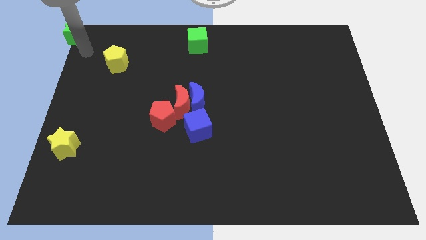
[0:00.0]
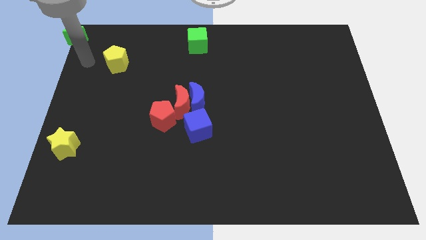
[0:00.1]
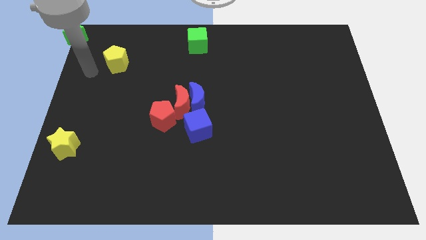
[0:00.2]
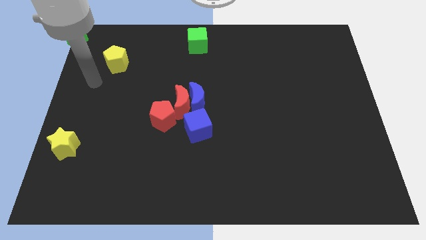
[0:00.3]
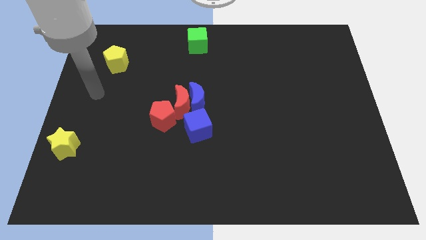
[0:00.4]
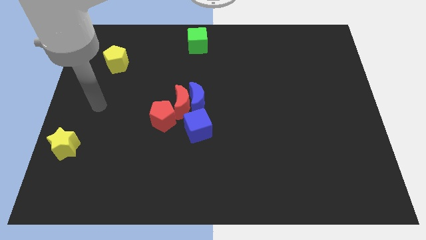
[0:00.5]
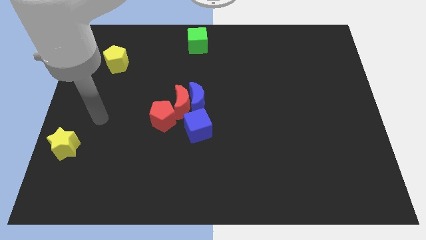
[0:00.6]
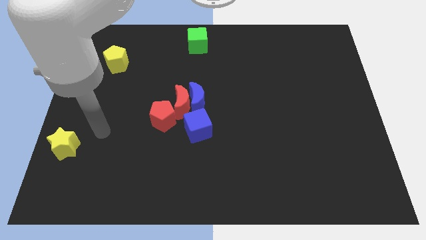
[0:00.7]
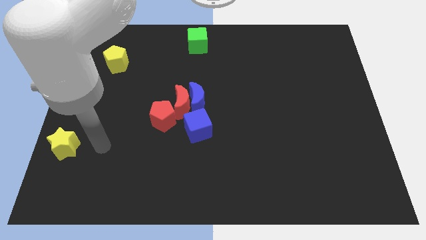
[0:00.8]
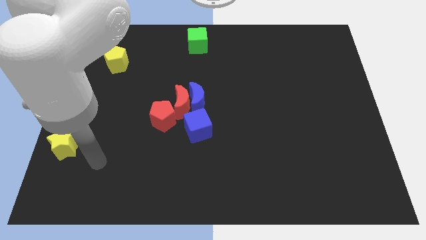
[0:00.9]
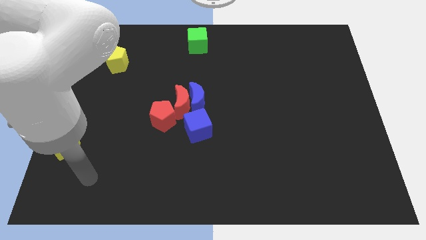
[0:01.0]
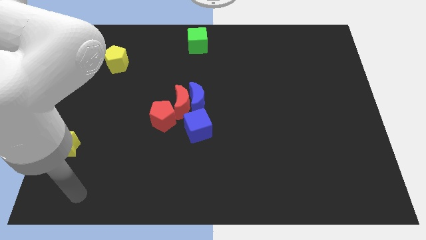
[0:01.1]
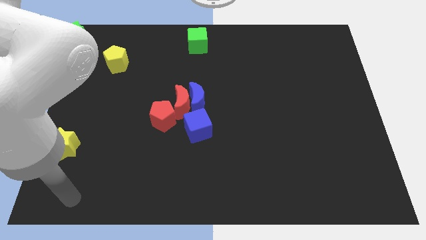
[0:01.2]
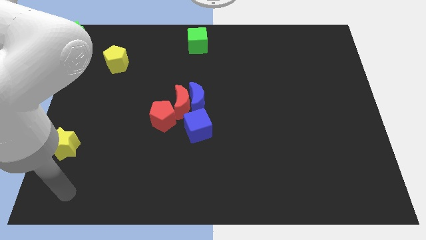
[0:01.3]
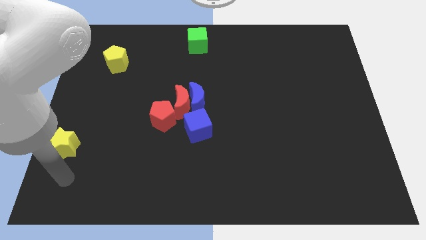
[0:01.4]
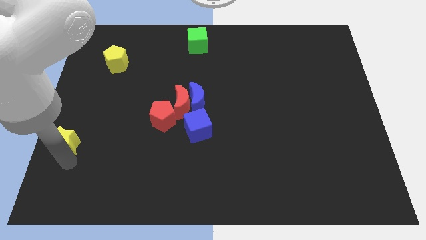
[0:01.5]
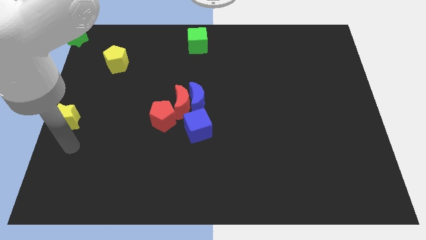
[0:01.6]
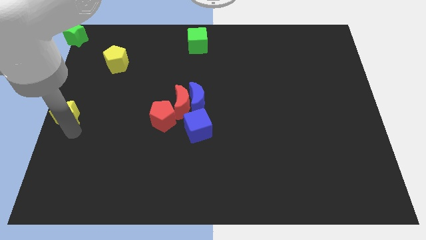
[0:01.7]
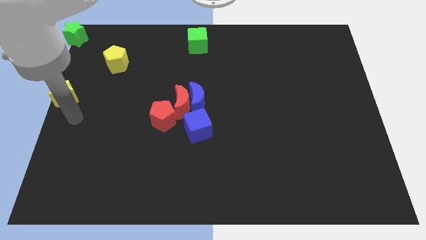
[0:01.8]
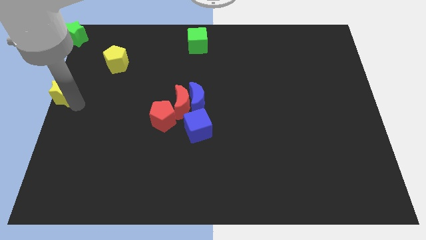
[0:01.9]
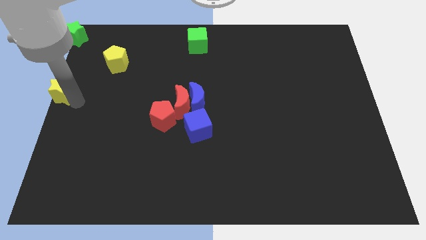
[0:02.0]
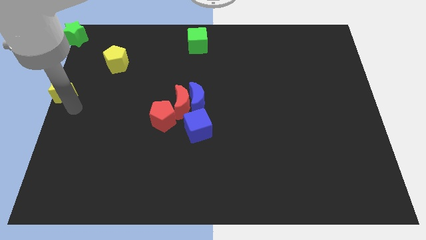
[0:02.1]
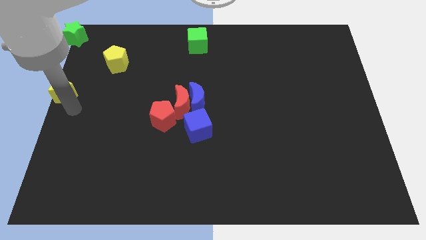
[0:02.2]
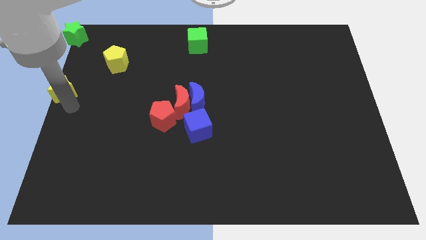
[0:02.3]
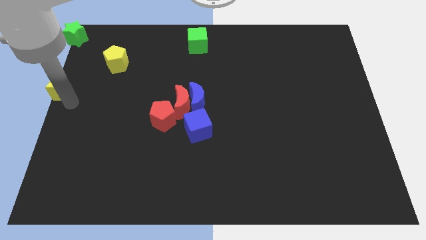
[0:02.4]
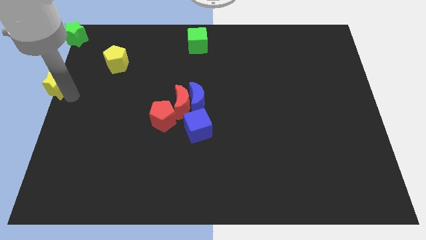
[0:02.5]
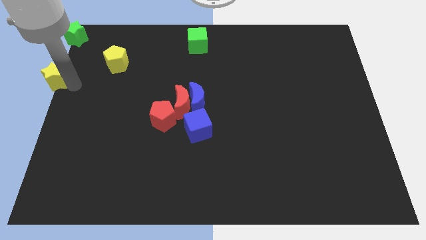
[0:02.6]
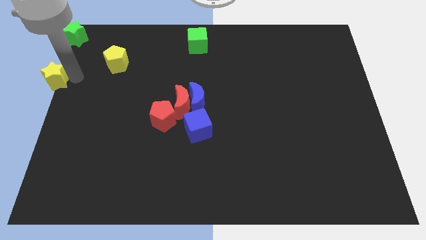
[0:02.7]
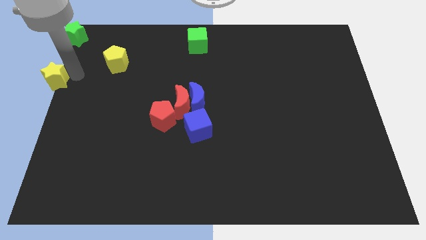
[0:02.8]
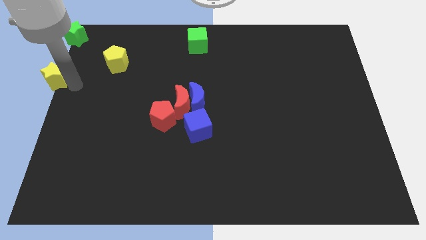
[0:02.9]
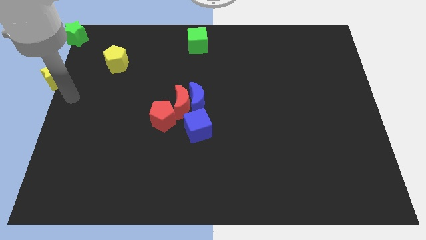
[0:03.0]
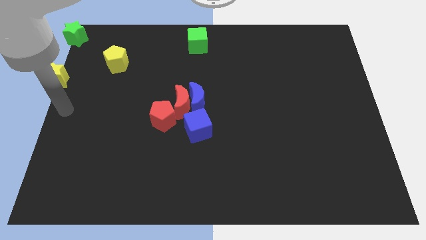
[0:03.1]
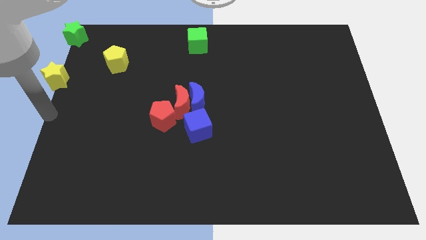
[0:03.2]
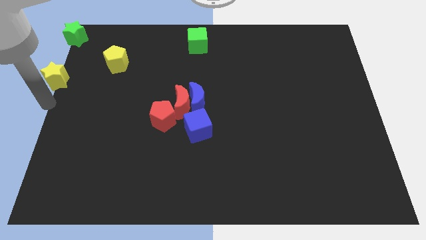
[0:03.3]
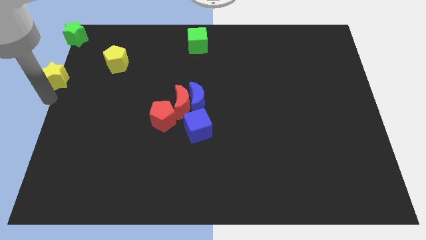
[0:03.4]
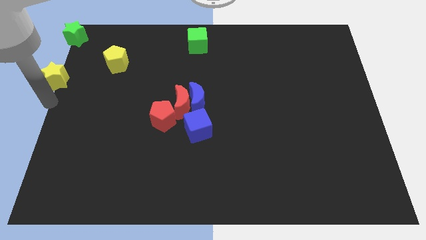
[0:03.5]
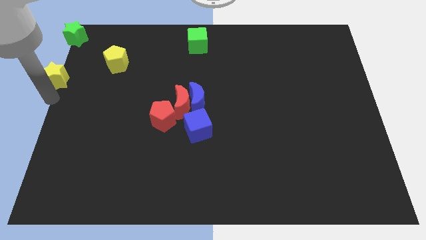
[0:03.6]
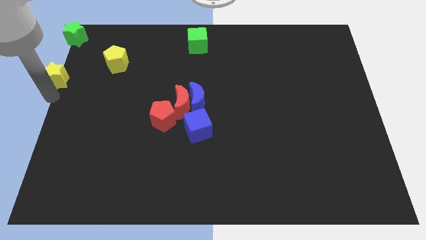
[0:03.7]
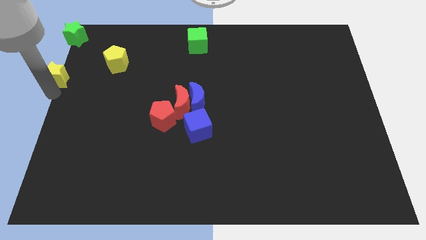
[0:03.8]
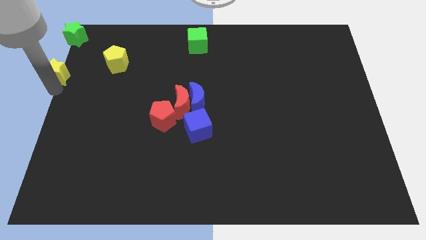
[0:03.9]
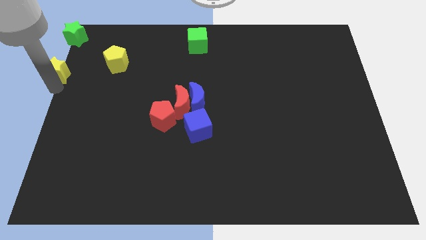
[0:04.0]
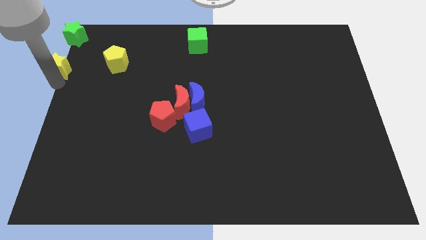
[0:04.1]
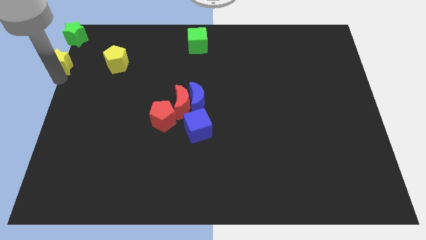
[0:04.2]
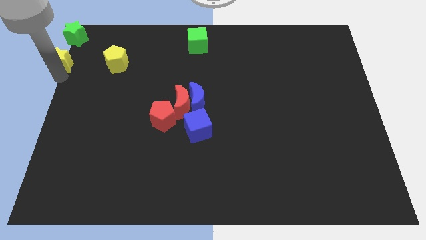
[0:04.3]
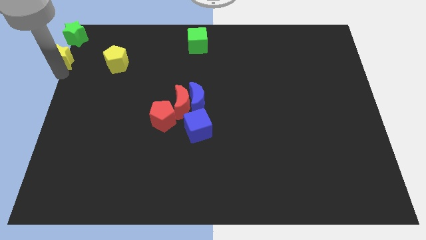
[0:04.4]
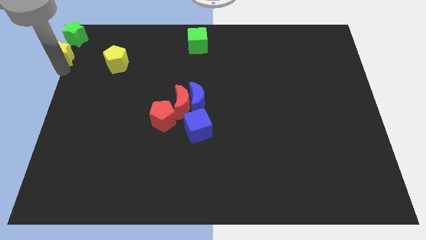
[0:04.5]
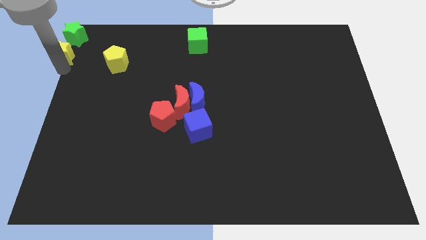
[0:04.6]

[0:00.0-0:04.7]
move the yellow star below the green star

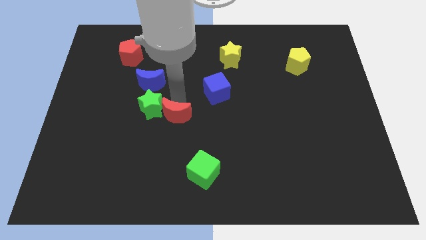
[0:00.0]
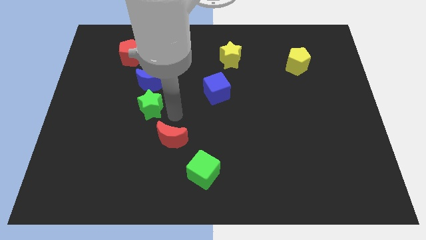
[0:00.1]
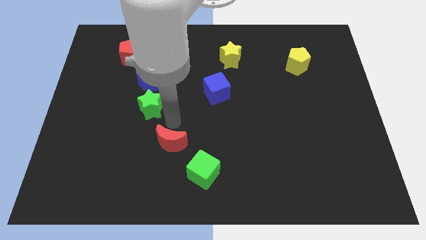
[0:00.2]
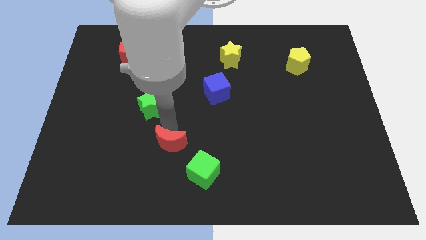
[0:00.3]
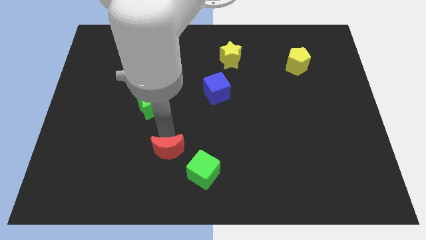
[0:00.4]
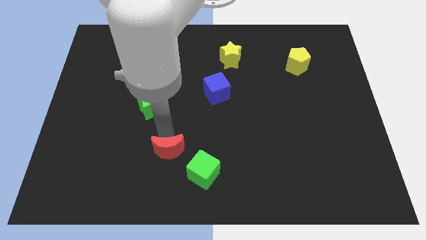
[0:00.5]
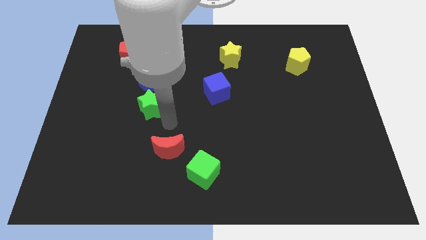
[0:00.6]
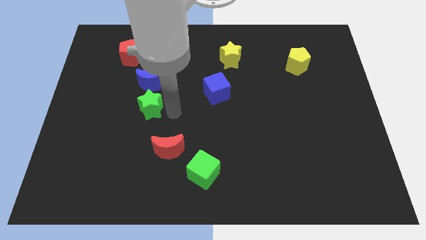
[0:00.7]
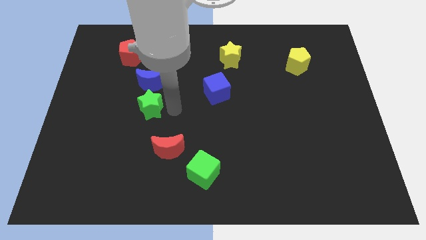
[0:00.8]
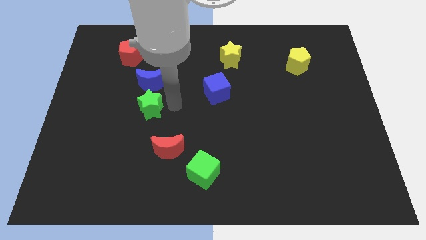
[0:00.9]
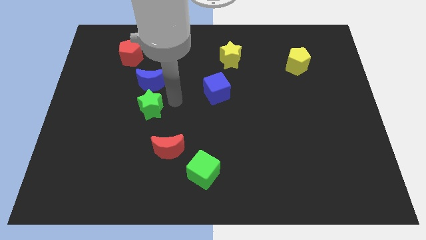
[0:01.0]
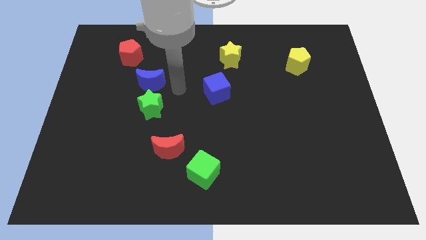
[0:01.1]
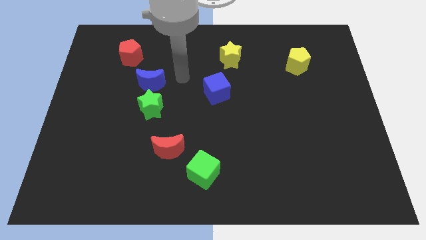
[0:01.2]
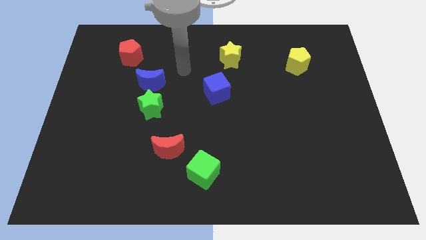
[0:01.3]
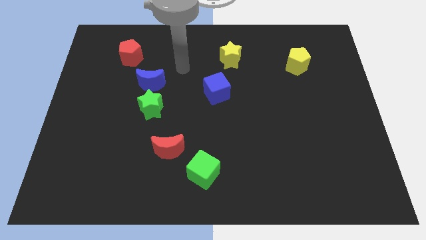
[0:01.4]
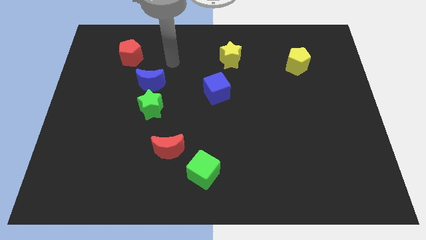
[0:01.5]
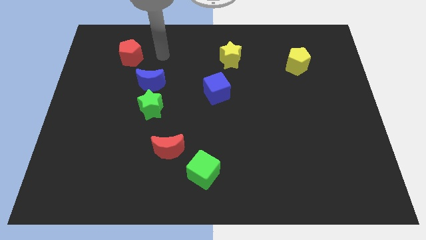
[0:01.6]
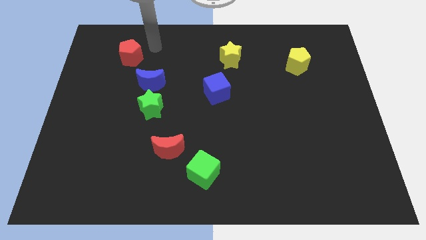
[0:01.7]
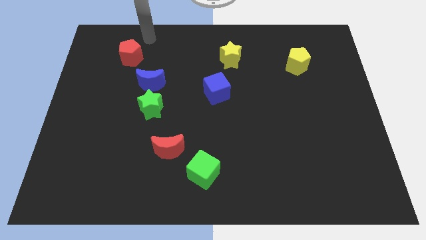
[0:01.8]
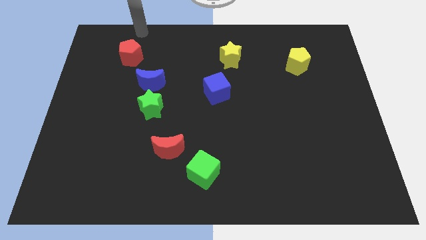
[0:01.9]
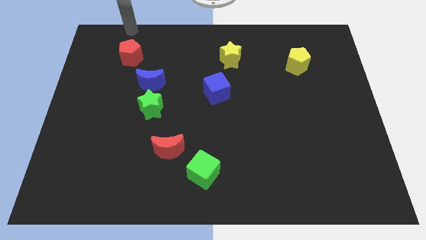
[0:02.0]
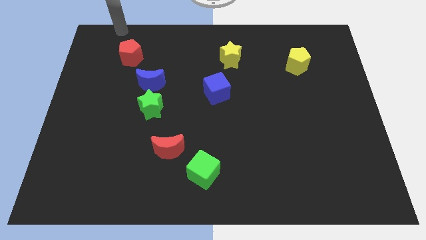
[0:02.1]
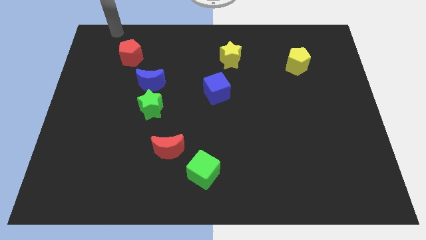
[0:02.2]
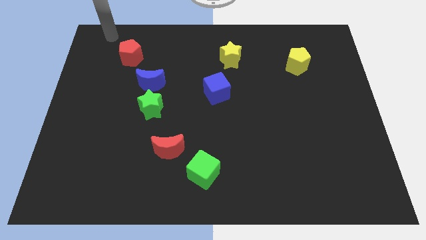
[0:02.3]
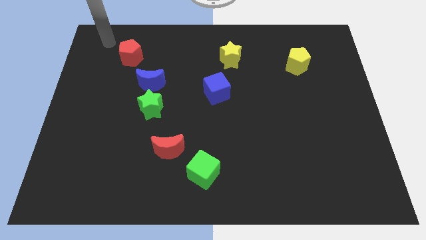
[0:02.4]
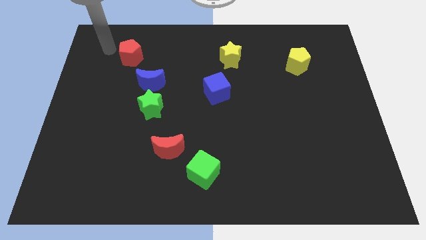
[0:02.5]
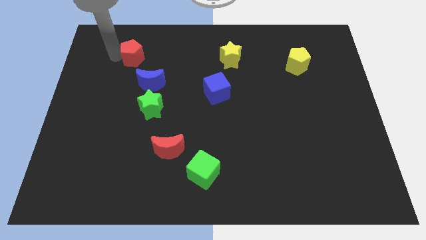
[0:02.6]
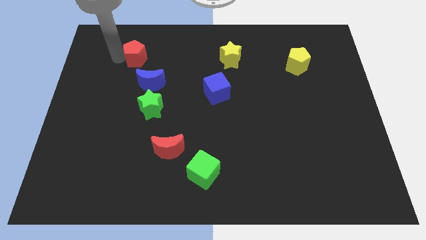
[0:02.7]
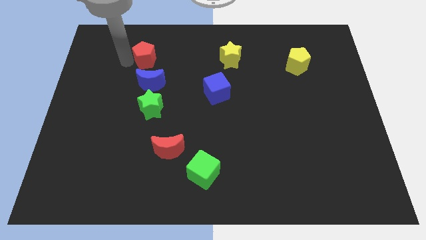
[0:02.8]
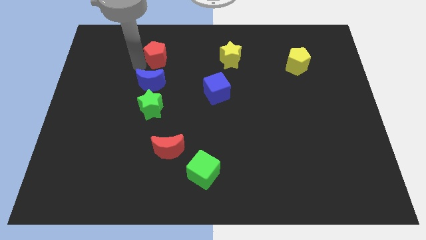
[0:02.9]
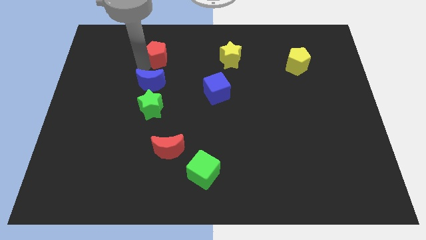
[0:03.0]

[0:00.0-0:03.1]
place the red pentagon above the blue moon

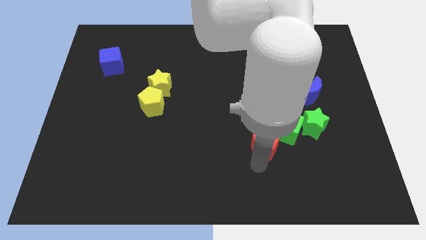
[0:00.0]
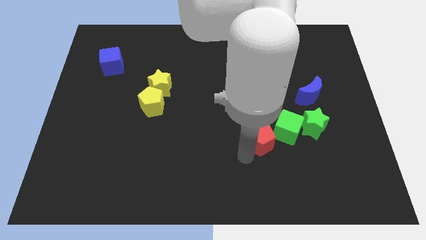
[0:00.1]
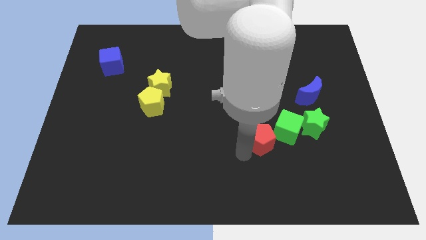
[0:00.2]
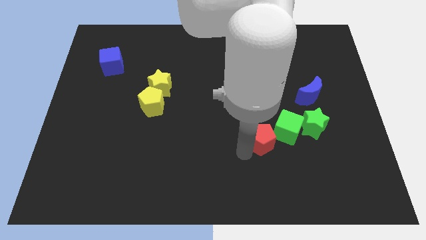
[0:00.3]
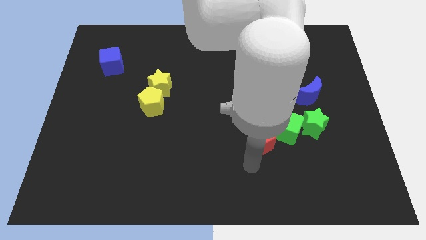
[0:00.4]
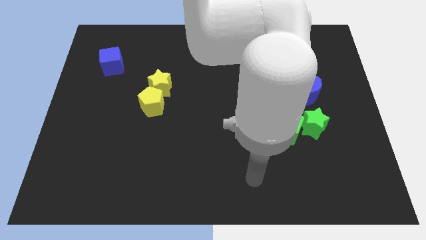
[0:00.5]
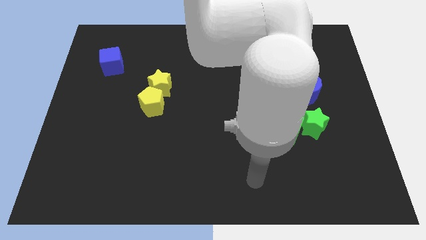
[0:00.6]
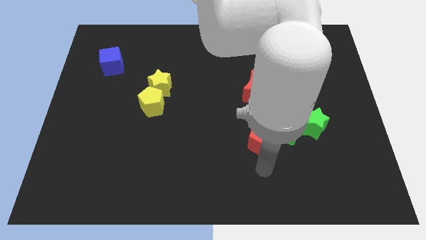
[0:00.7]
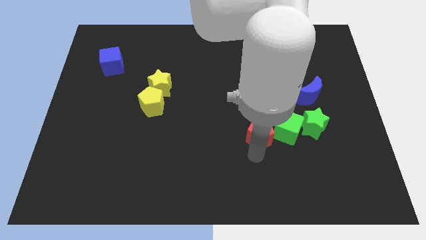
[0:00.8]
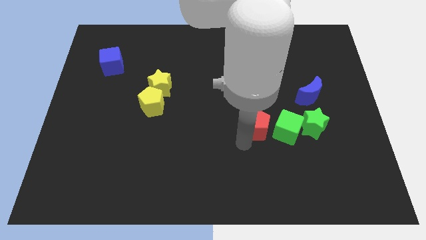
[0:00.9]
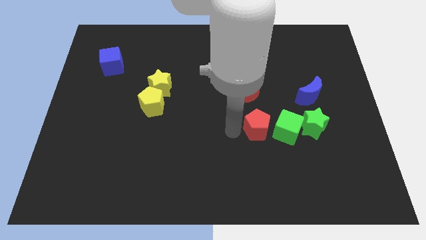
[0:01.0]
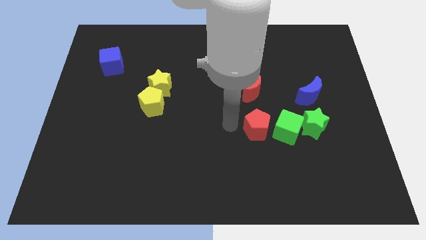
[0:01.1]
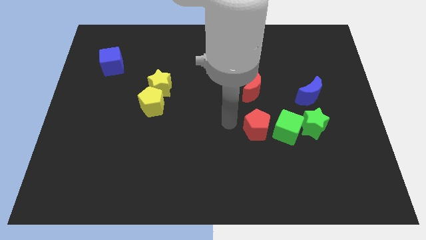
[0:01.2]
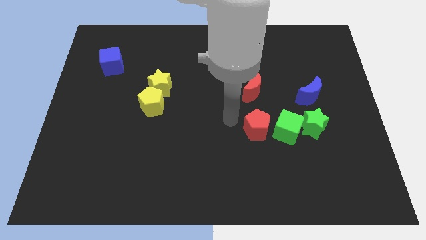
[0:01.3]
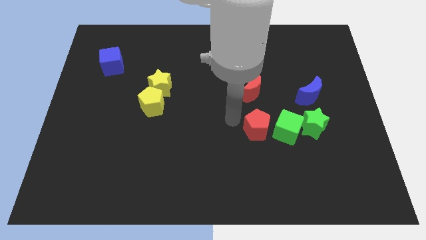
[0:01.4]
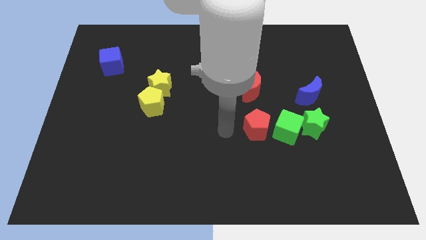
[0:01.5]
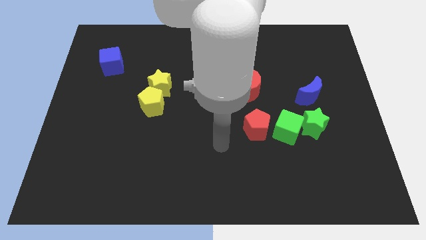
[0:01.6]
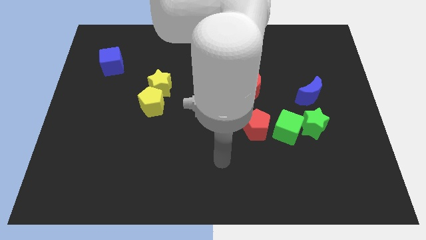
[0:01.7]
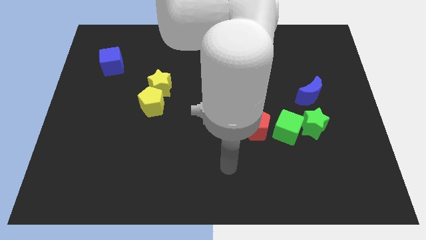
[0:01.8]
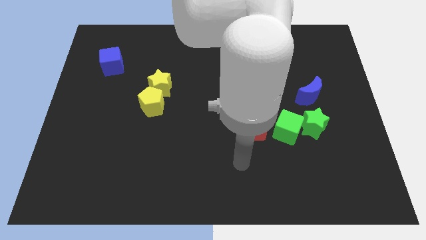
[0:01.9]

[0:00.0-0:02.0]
place the red pentagon to the left of green cube
